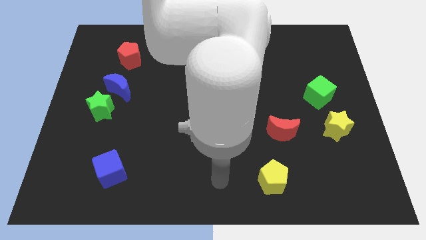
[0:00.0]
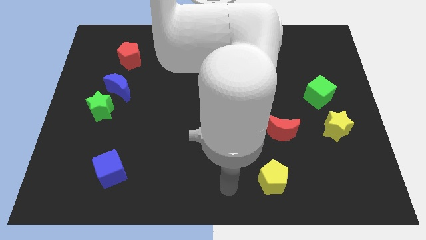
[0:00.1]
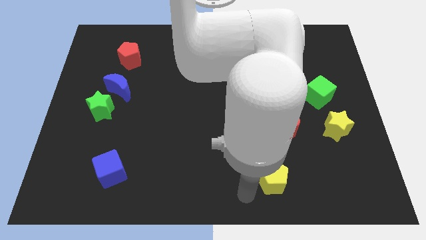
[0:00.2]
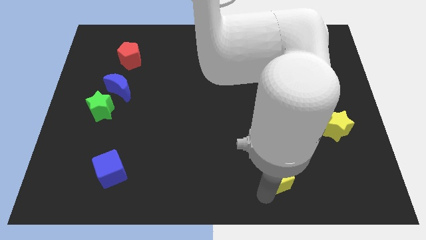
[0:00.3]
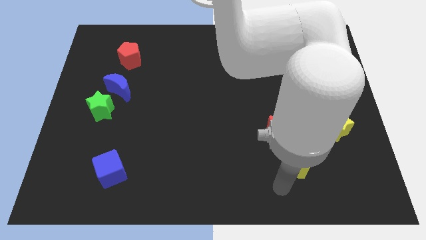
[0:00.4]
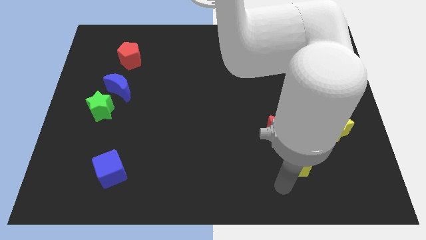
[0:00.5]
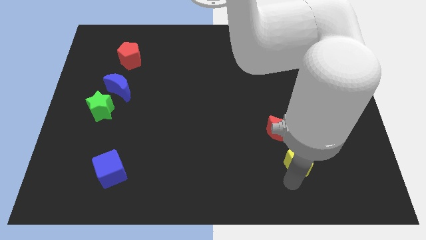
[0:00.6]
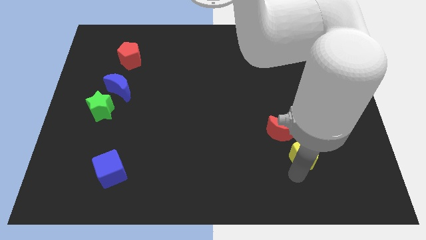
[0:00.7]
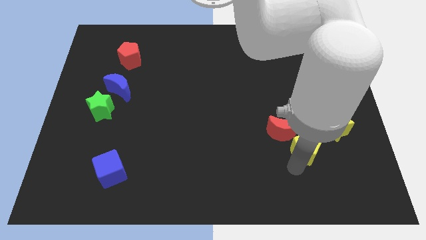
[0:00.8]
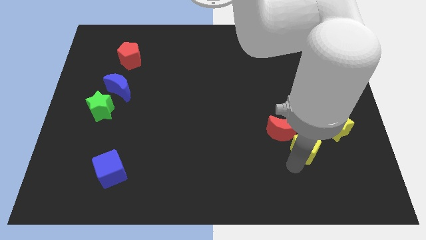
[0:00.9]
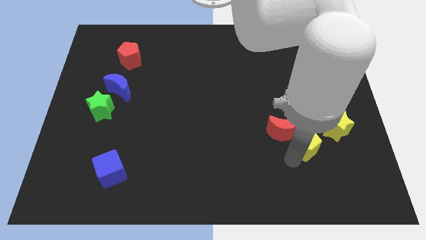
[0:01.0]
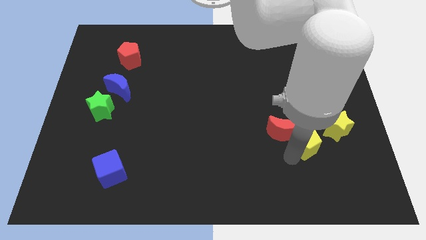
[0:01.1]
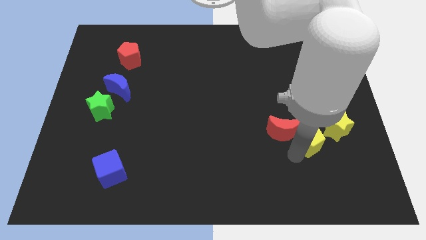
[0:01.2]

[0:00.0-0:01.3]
move the yellow pentagon towards yellow star

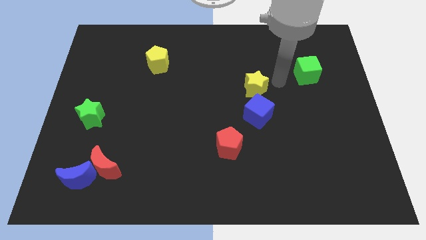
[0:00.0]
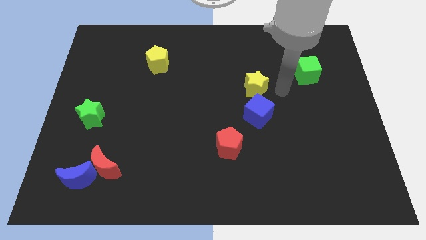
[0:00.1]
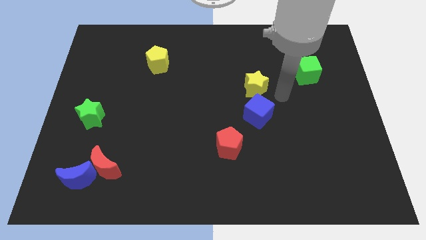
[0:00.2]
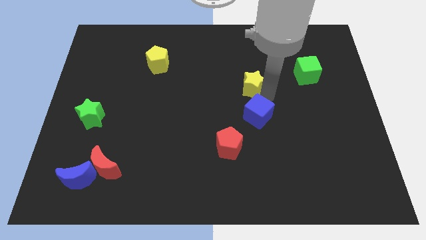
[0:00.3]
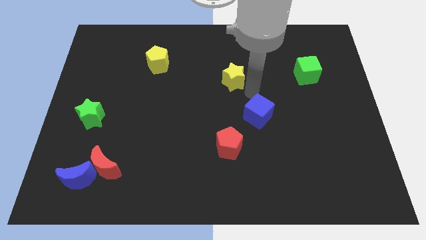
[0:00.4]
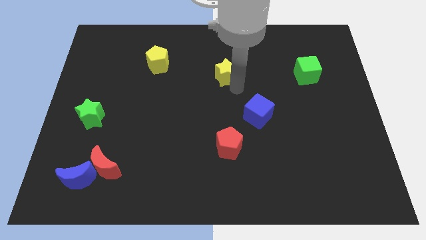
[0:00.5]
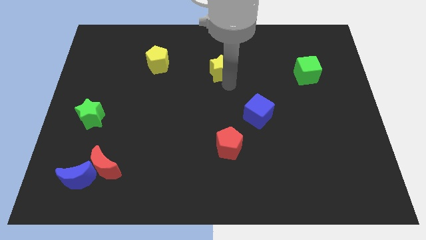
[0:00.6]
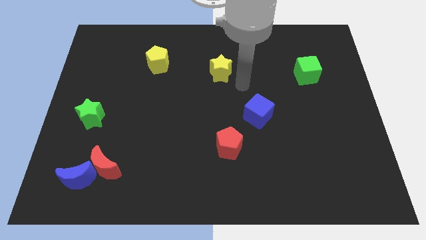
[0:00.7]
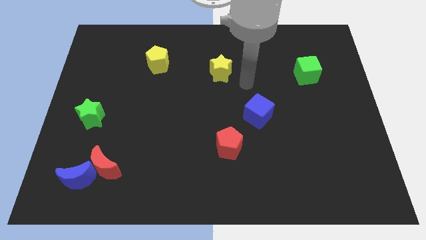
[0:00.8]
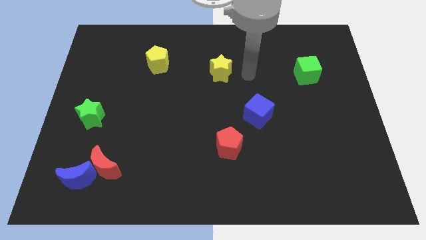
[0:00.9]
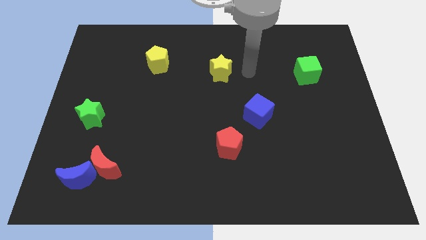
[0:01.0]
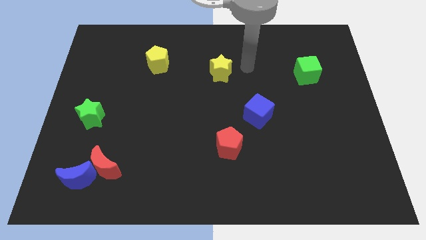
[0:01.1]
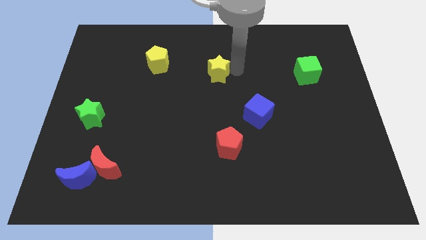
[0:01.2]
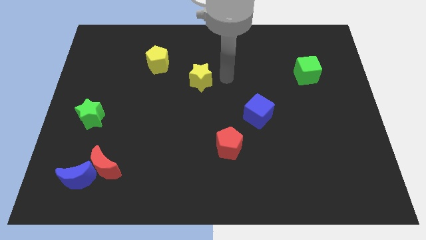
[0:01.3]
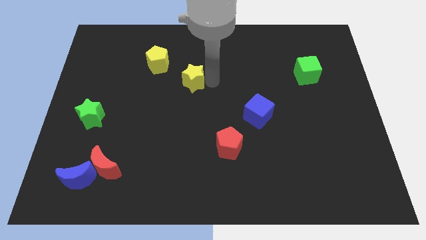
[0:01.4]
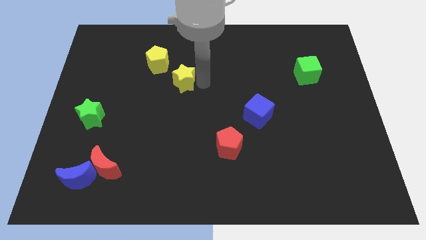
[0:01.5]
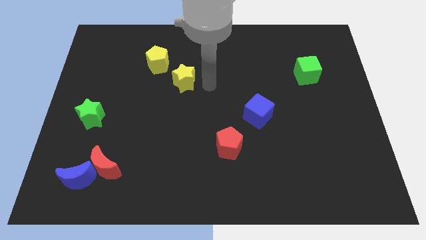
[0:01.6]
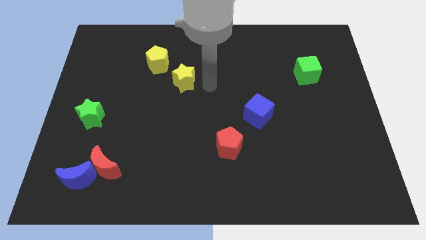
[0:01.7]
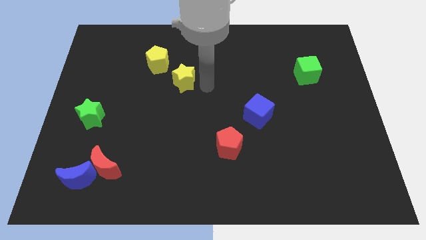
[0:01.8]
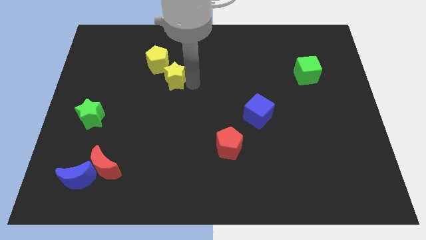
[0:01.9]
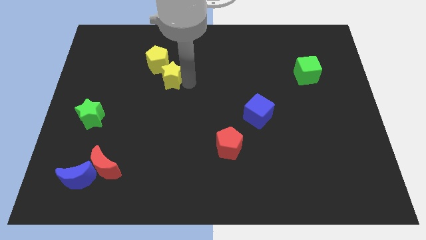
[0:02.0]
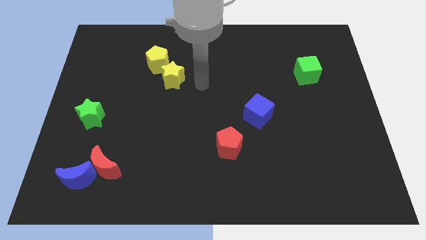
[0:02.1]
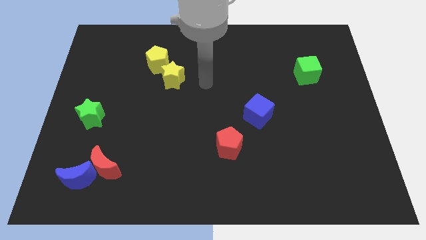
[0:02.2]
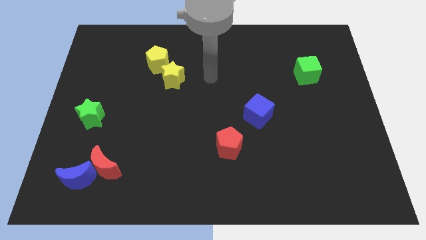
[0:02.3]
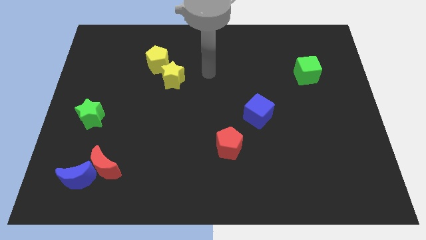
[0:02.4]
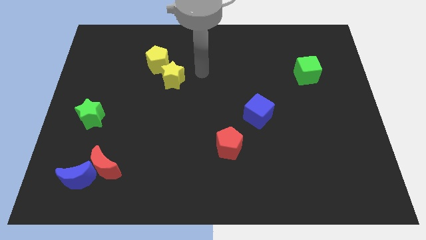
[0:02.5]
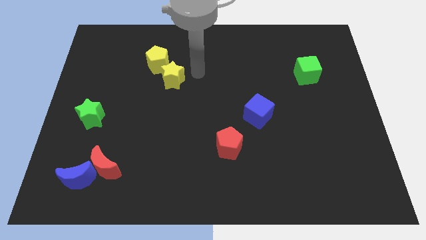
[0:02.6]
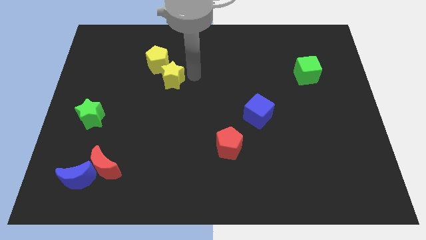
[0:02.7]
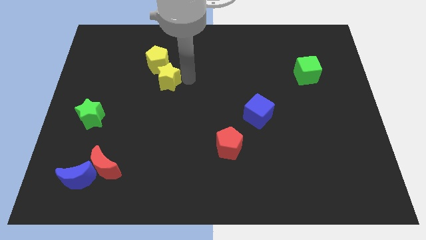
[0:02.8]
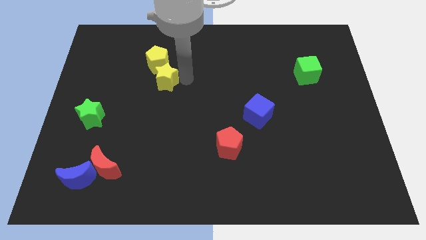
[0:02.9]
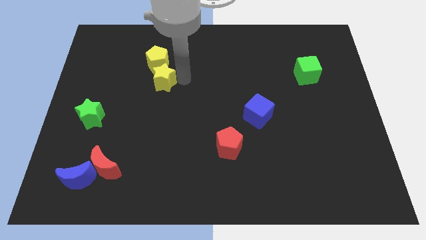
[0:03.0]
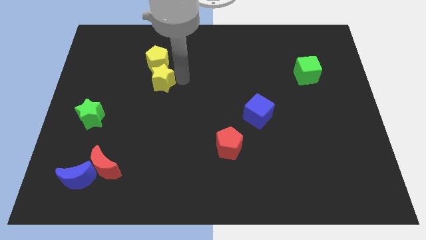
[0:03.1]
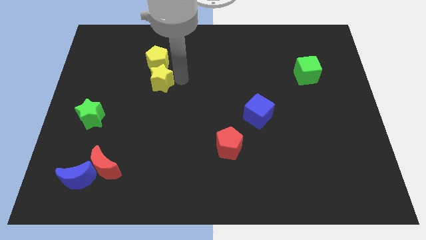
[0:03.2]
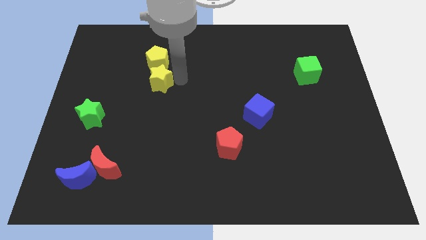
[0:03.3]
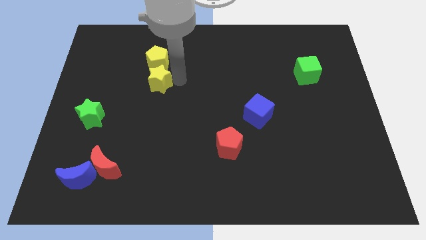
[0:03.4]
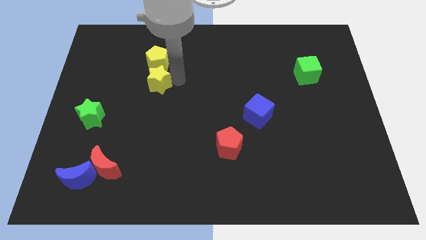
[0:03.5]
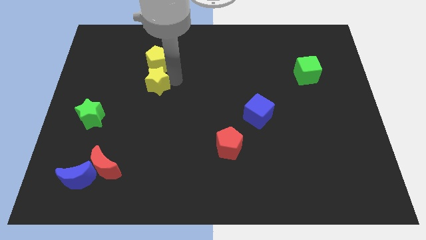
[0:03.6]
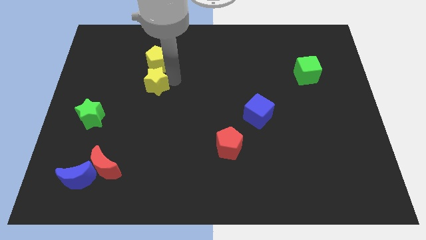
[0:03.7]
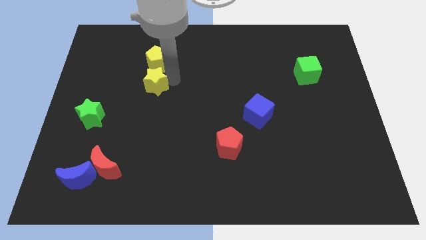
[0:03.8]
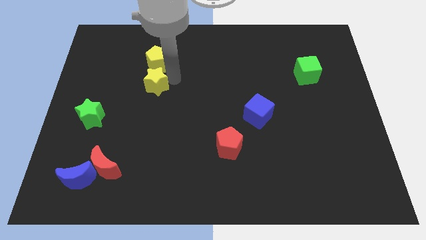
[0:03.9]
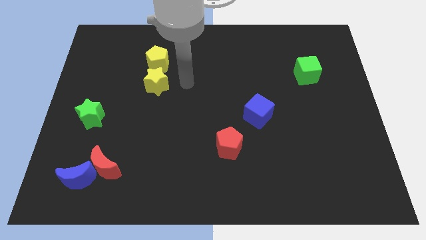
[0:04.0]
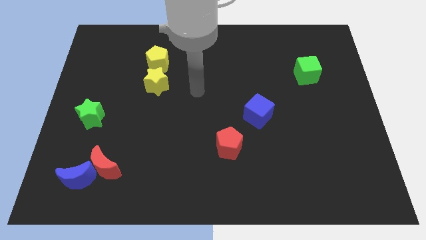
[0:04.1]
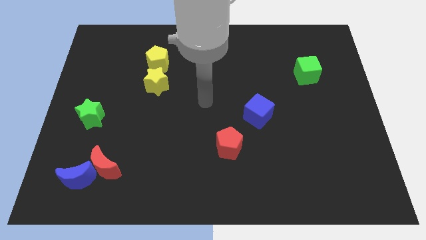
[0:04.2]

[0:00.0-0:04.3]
put the yellow star at the bottom side of the yellow pentagon

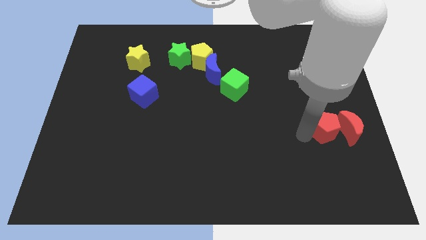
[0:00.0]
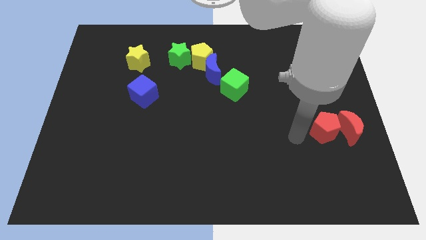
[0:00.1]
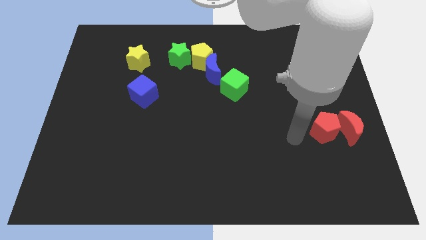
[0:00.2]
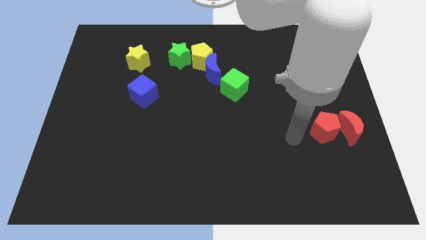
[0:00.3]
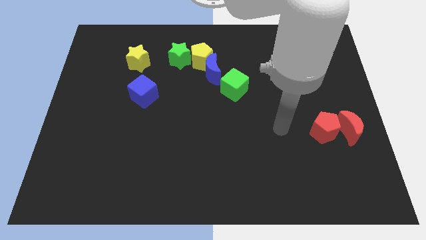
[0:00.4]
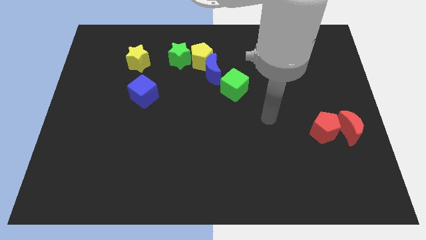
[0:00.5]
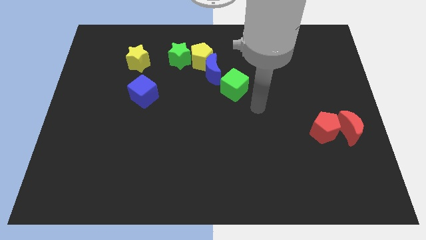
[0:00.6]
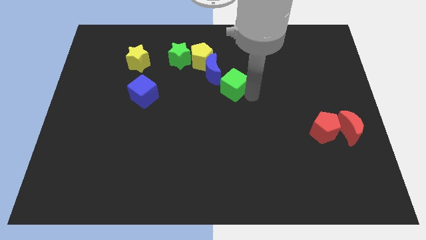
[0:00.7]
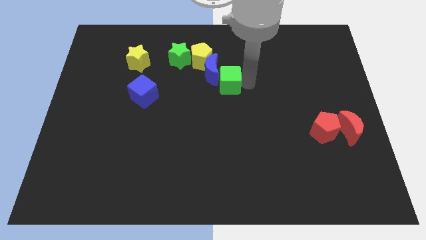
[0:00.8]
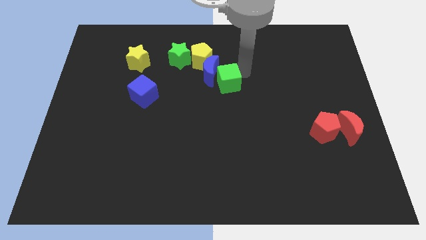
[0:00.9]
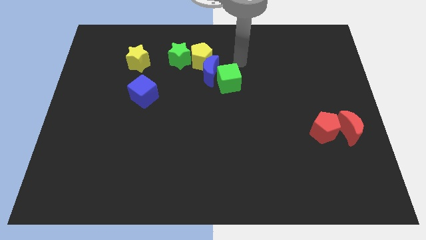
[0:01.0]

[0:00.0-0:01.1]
place your hand at the top right side of the green cube

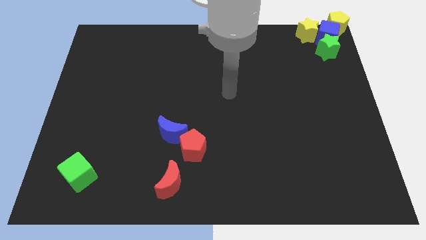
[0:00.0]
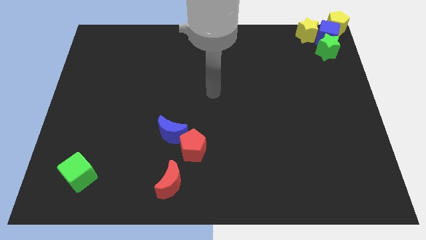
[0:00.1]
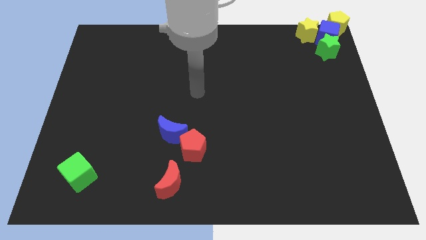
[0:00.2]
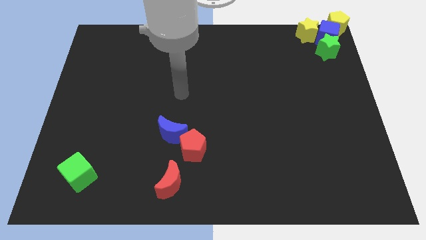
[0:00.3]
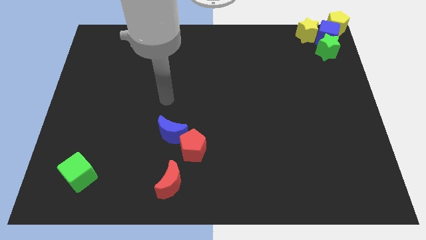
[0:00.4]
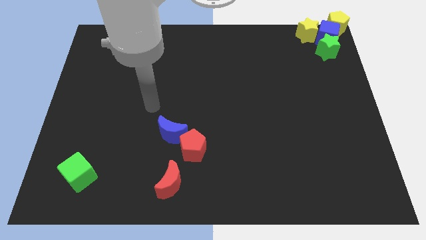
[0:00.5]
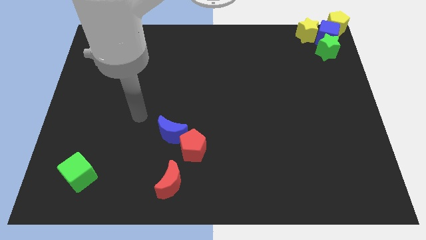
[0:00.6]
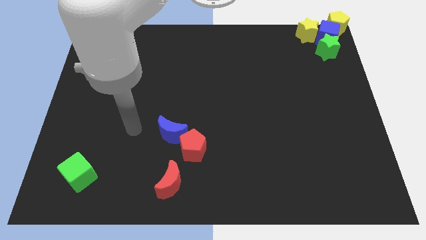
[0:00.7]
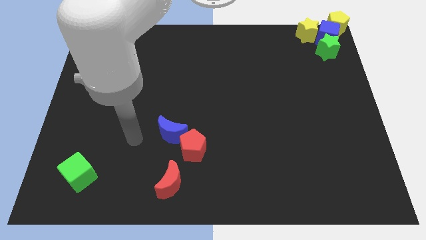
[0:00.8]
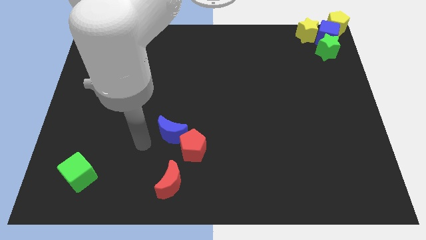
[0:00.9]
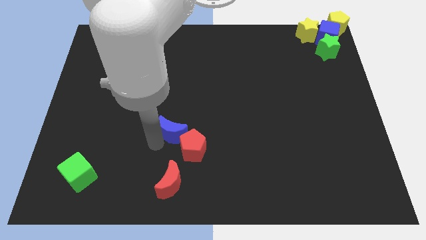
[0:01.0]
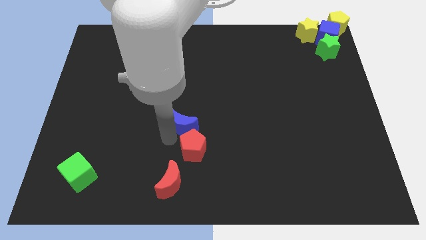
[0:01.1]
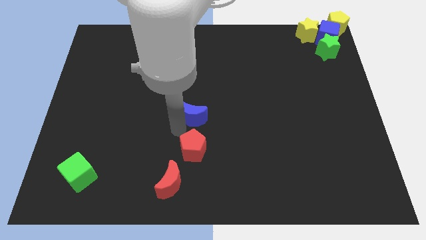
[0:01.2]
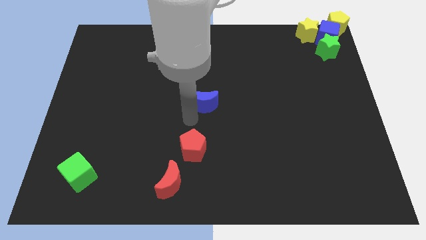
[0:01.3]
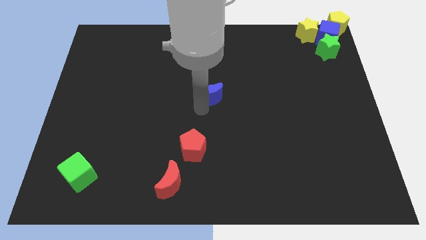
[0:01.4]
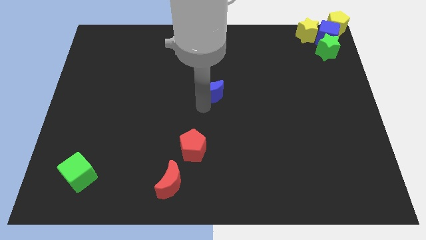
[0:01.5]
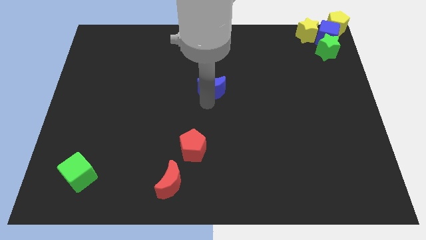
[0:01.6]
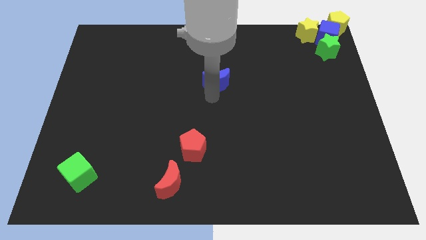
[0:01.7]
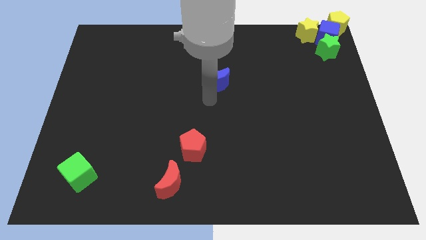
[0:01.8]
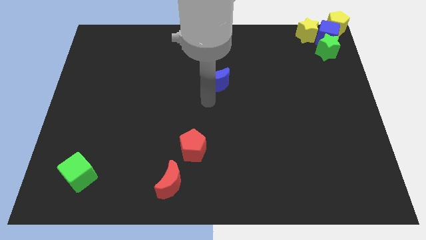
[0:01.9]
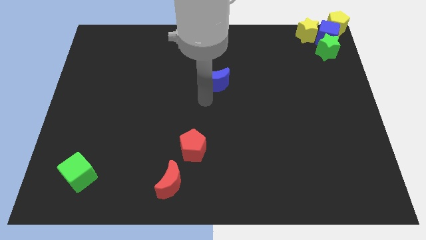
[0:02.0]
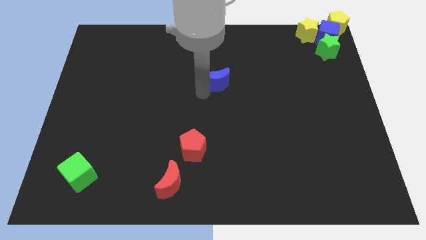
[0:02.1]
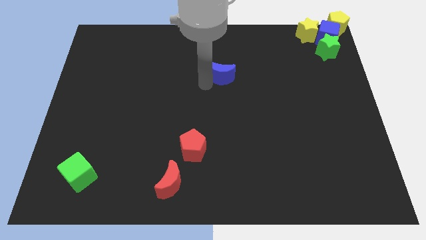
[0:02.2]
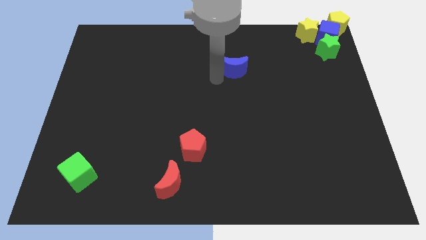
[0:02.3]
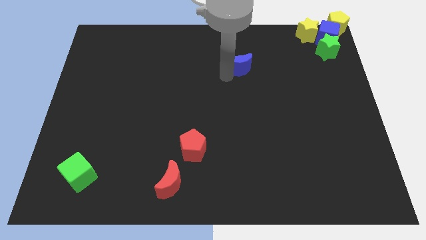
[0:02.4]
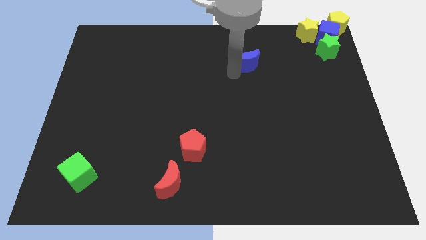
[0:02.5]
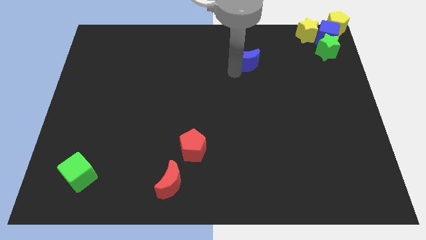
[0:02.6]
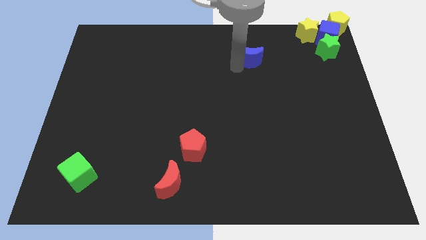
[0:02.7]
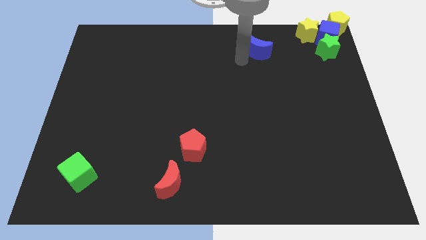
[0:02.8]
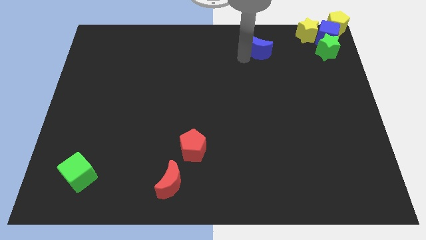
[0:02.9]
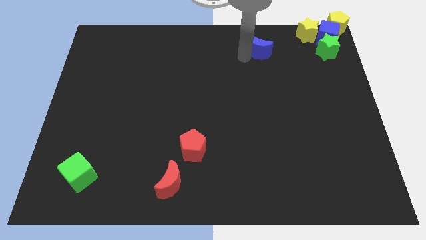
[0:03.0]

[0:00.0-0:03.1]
separate blue crescent from red pentagon
